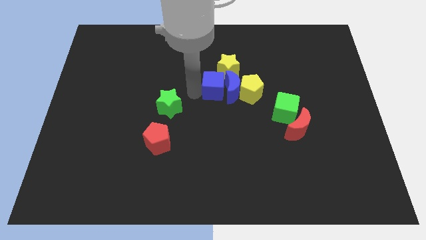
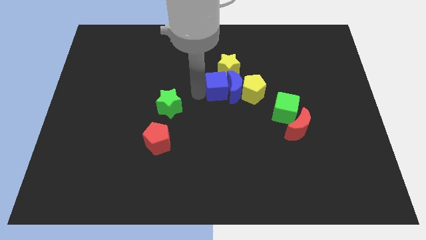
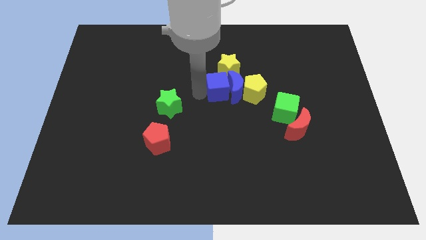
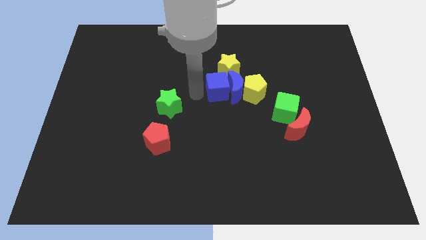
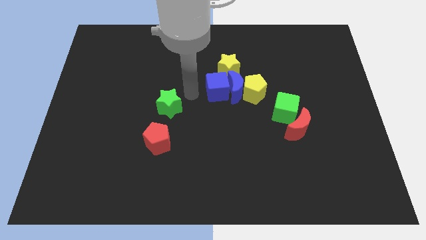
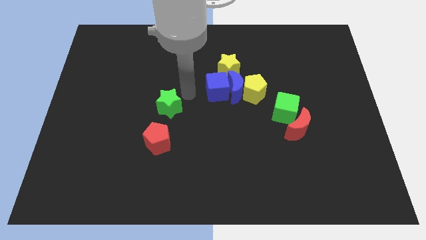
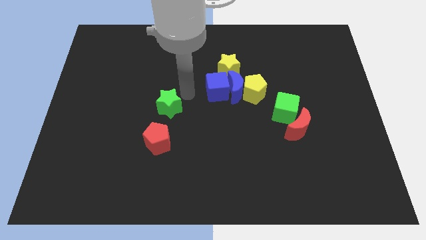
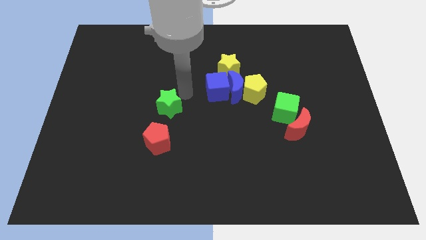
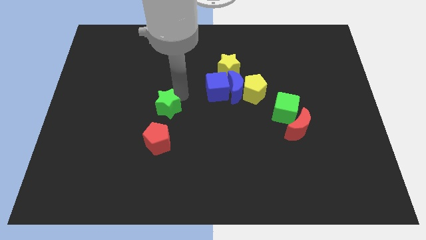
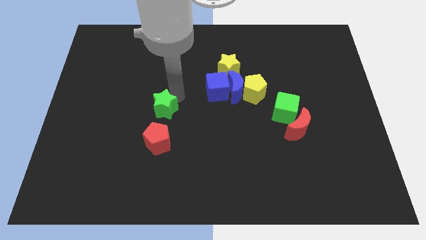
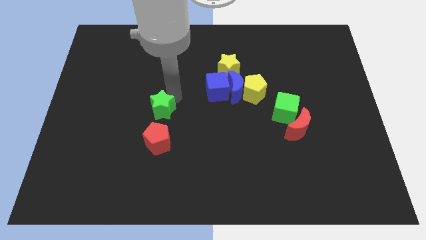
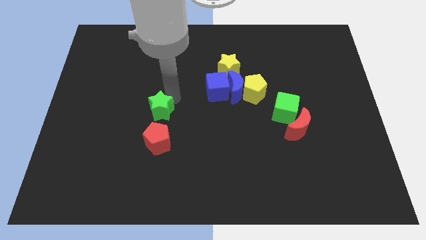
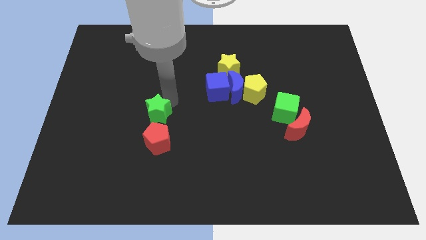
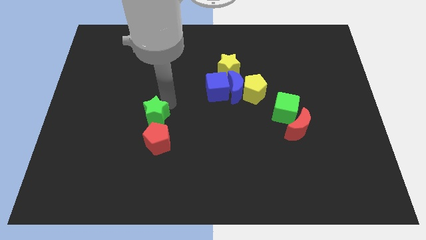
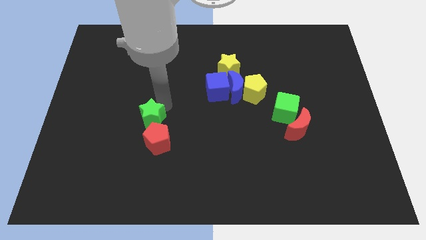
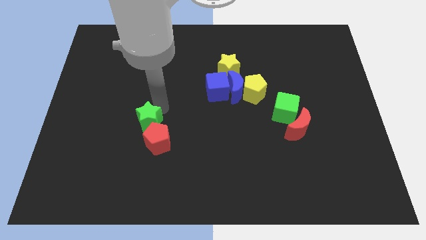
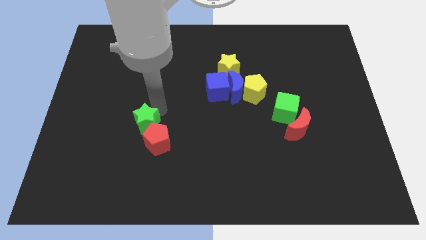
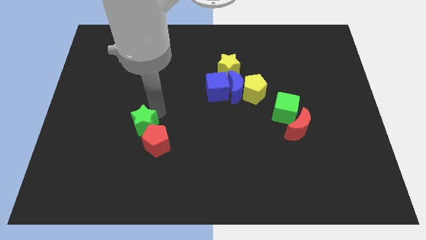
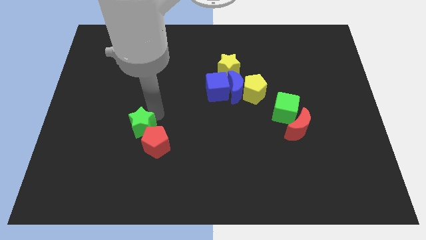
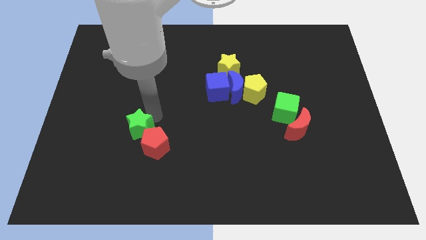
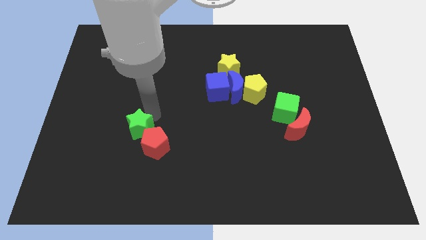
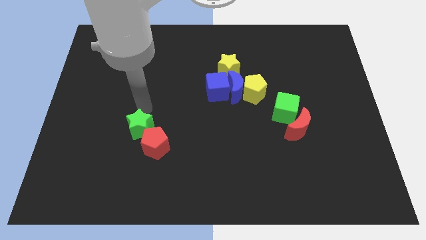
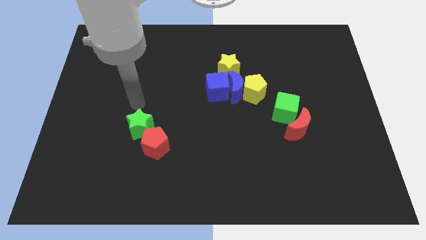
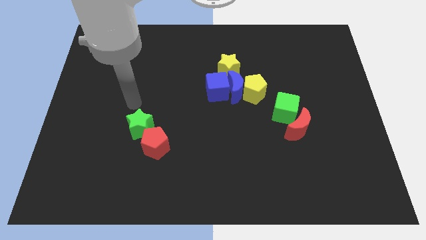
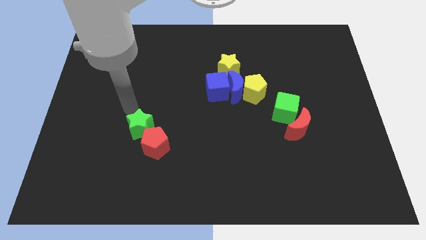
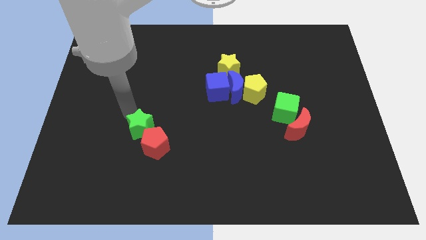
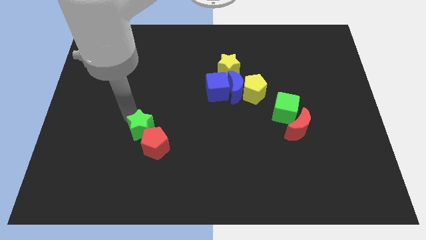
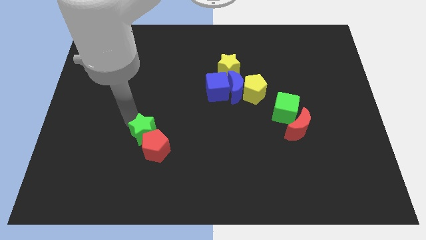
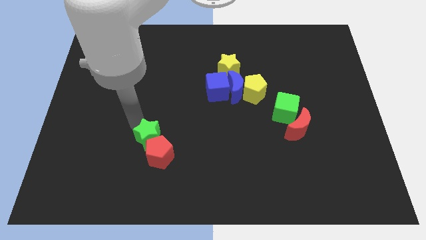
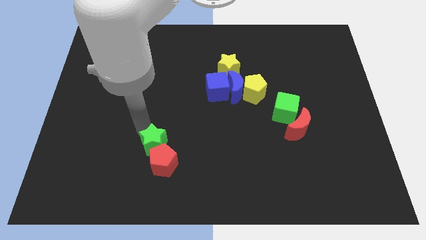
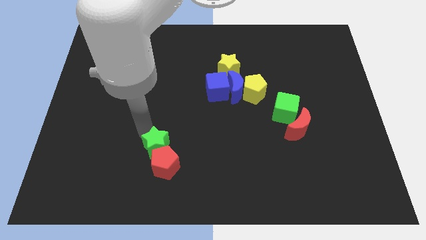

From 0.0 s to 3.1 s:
push the green star into the red pentagon

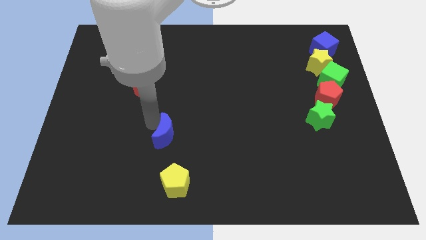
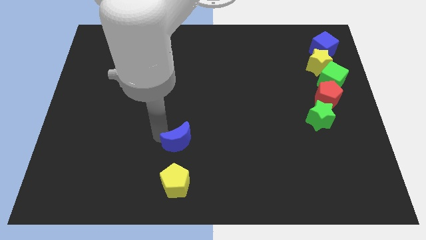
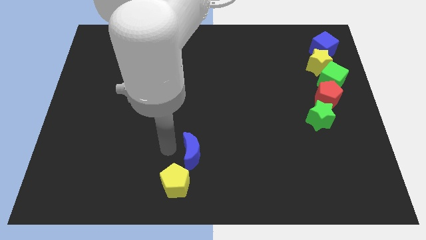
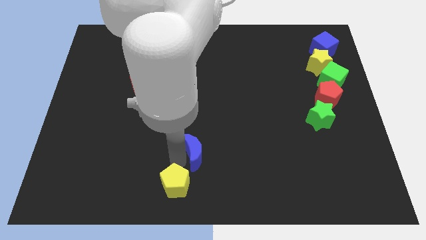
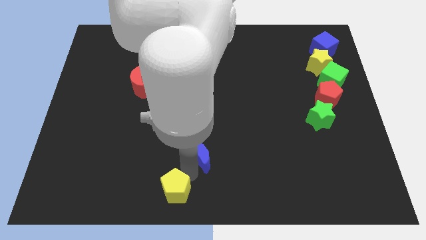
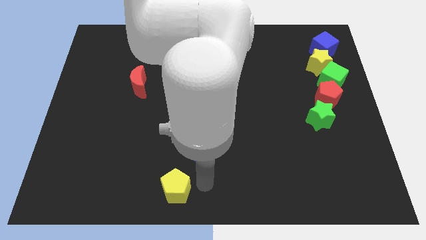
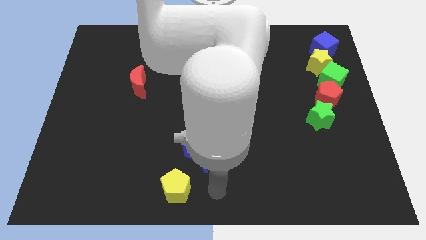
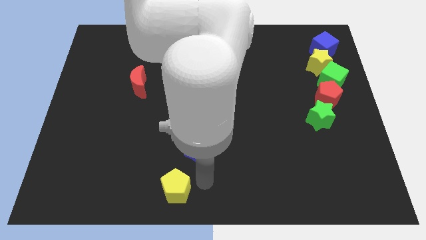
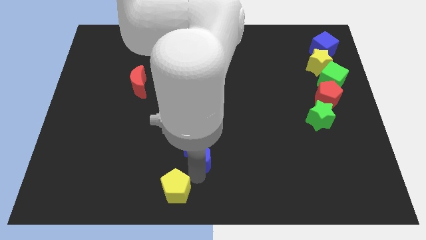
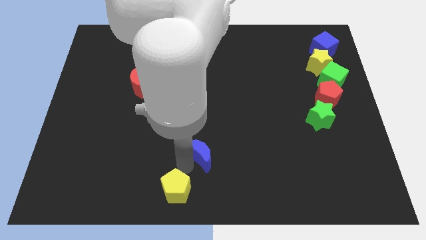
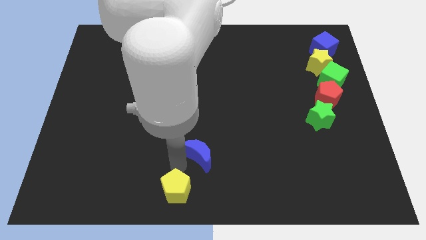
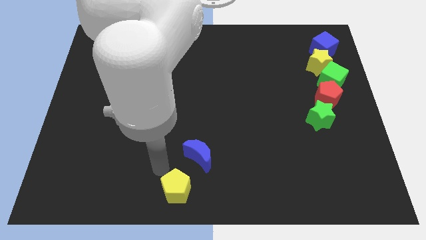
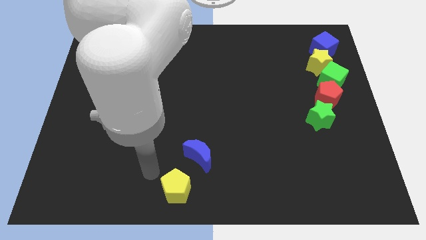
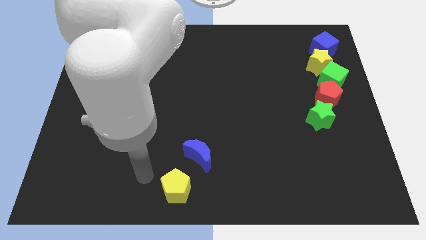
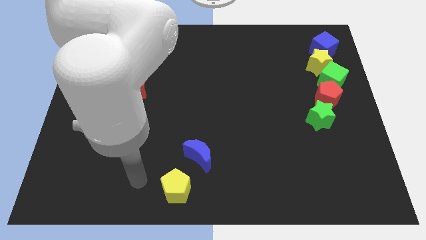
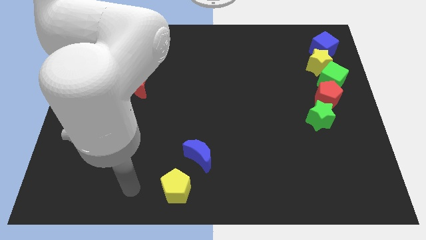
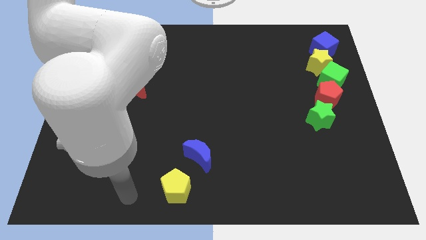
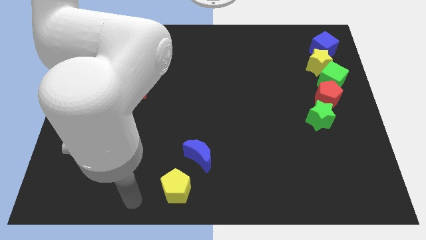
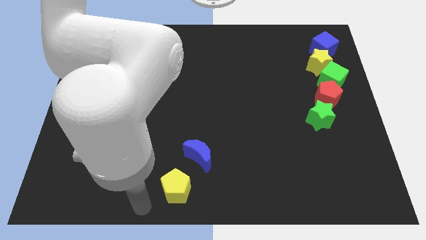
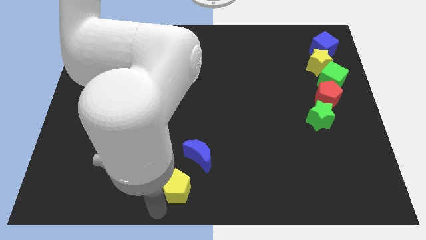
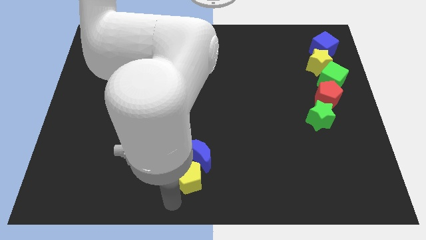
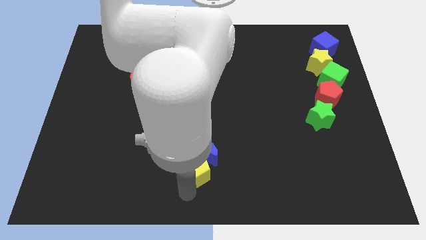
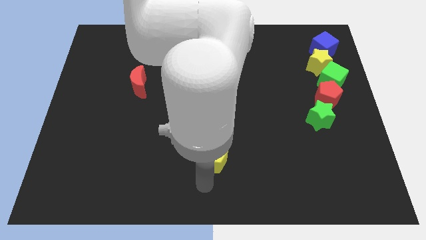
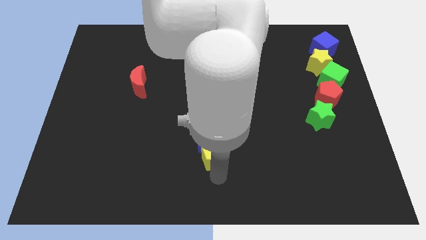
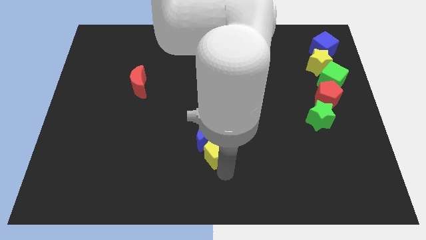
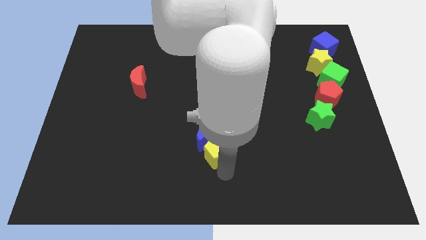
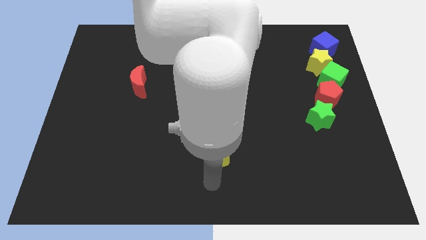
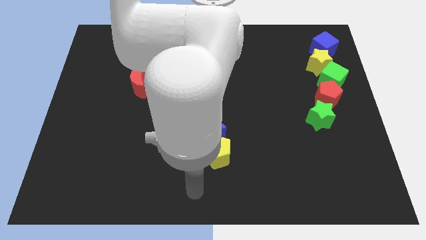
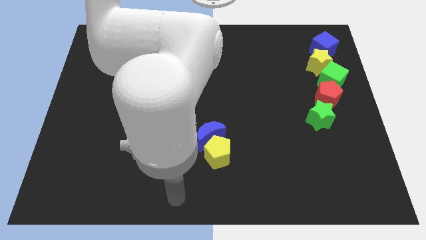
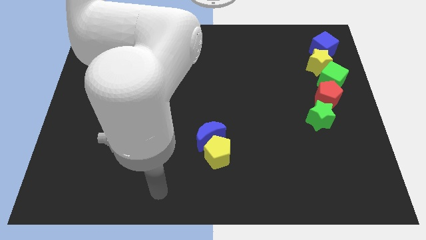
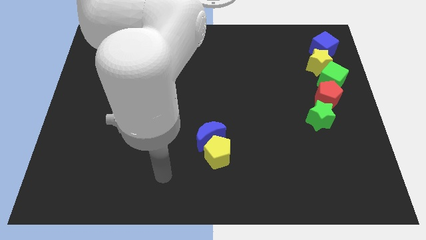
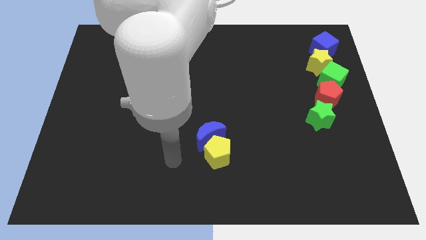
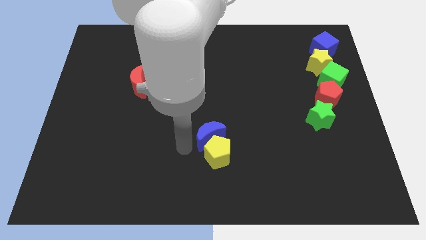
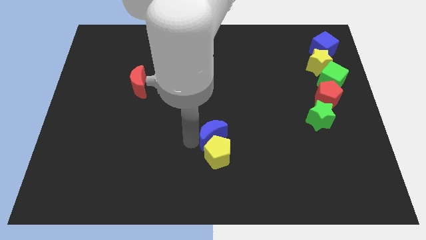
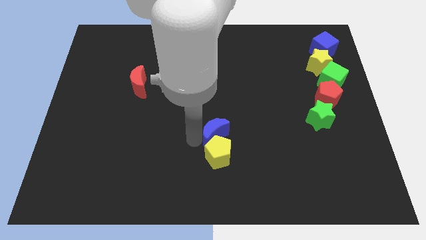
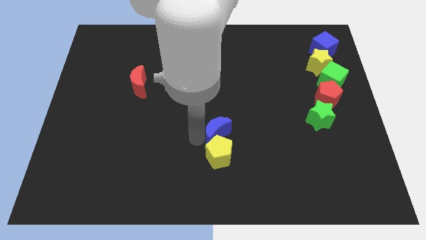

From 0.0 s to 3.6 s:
place the blue moon and the yellow pentagon together near the center of the board

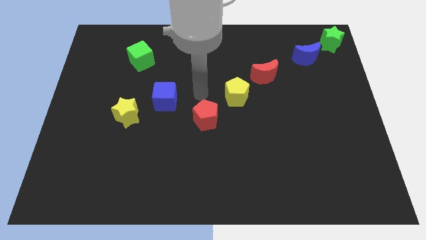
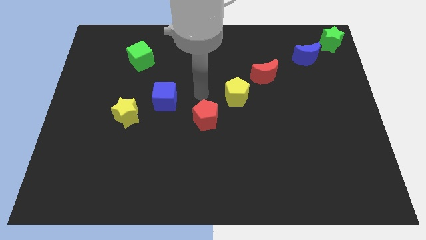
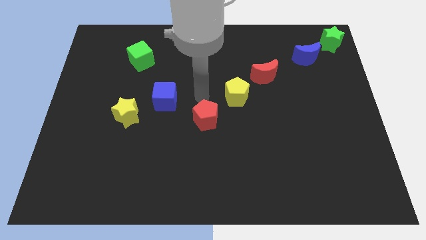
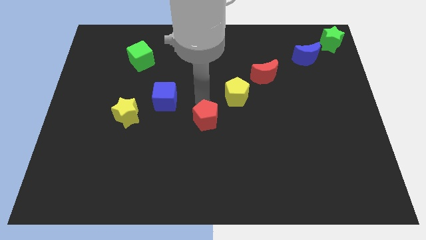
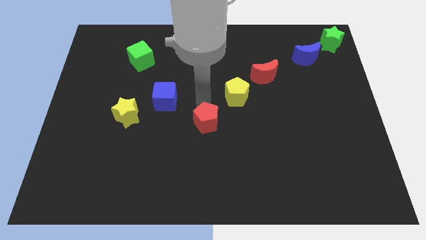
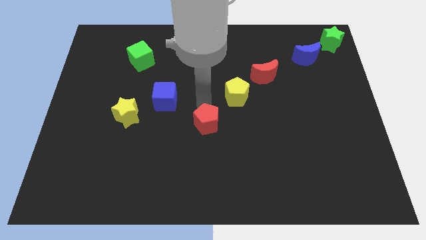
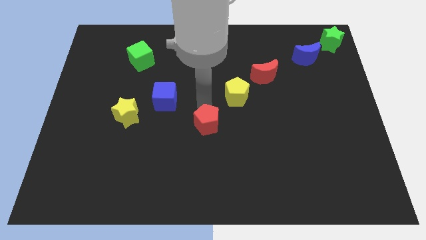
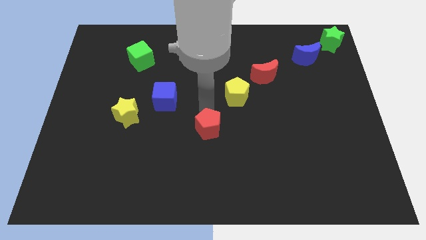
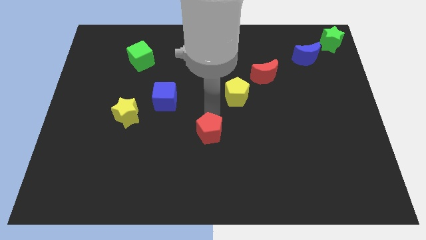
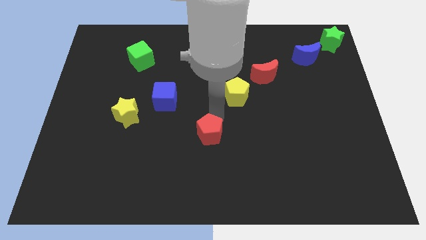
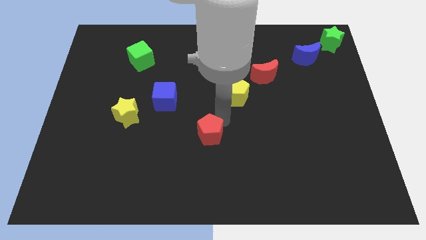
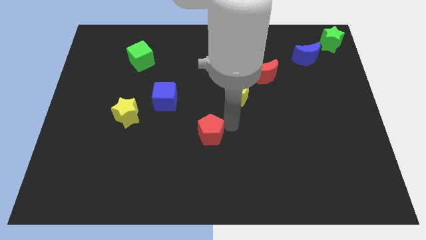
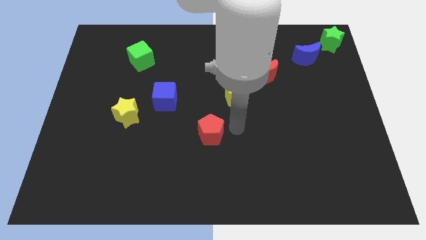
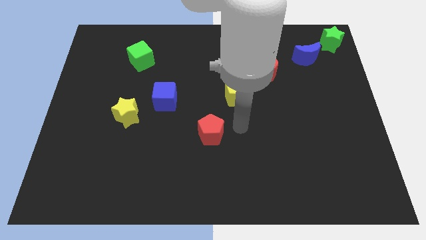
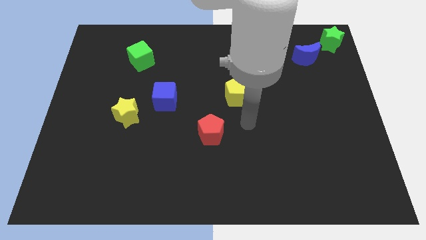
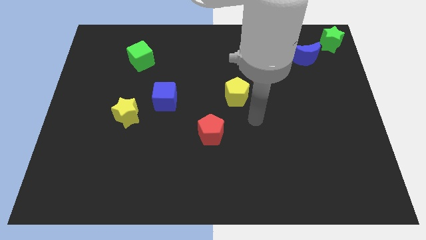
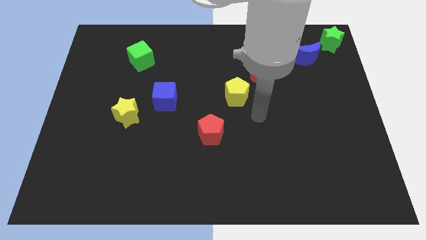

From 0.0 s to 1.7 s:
push the red pentagon slightly to the bottom side of the board

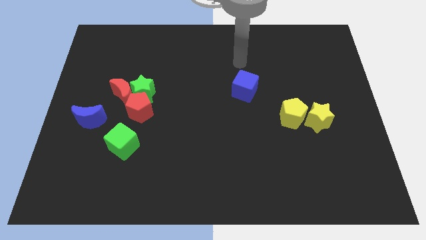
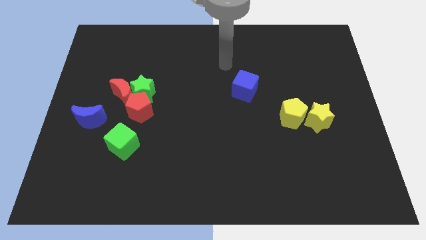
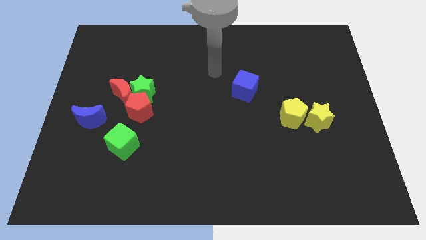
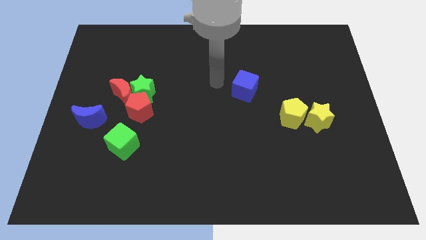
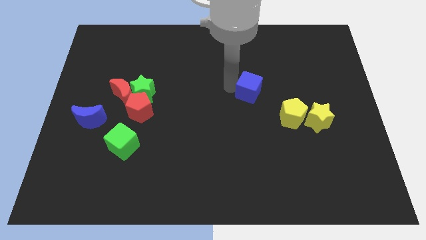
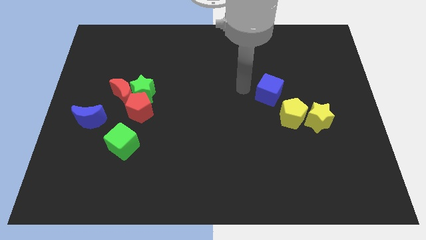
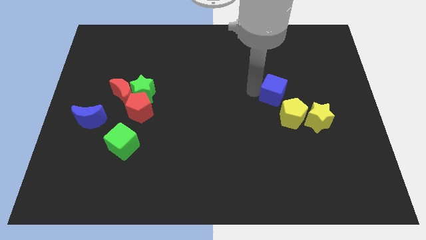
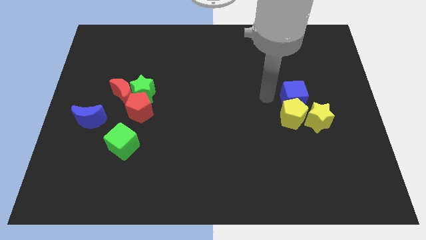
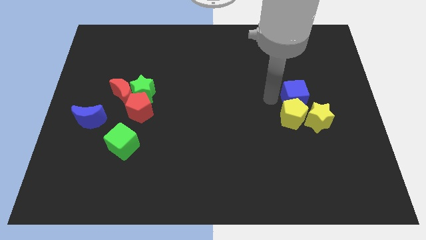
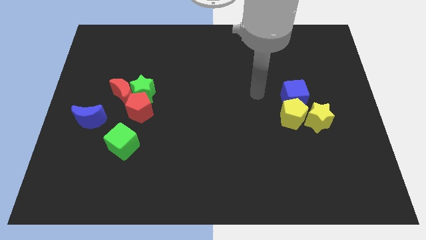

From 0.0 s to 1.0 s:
push the blue cube above the yellow pentagon
